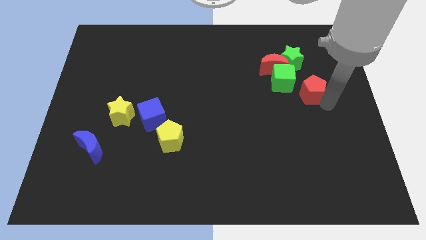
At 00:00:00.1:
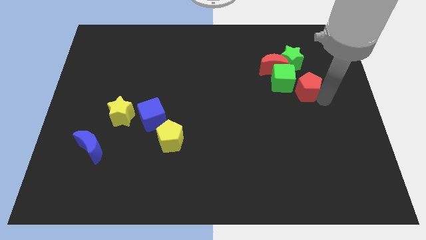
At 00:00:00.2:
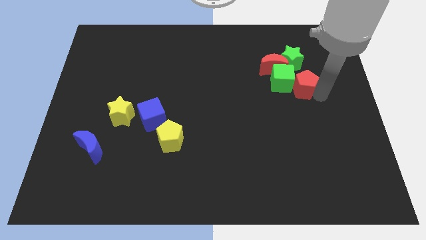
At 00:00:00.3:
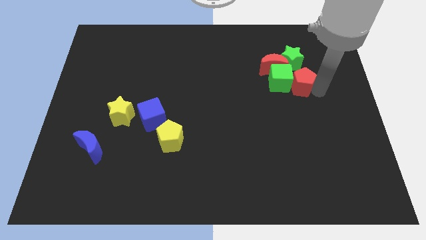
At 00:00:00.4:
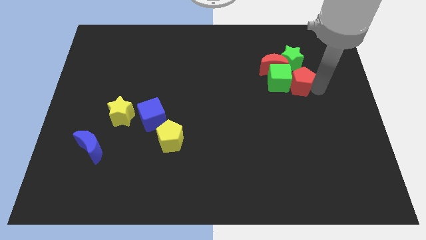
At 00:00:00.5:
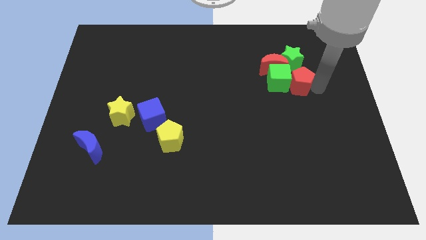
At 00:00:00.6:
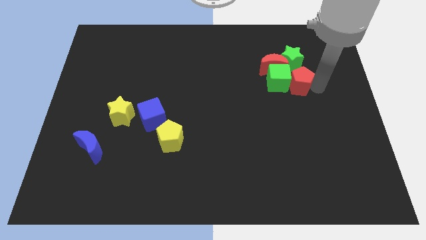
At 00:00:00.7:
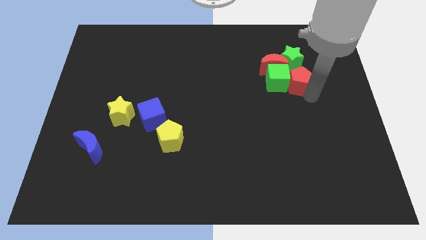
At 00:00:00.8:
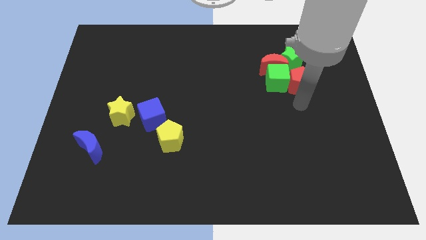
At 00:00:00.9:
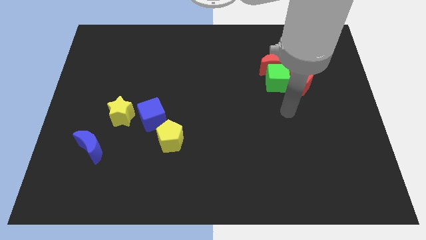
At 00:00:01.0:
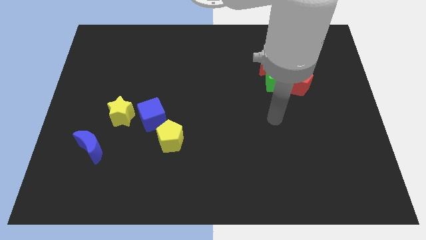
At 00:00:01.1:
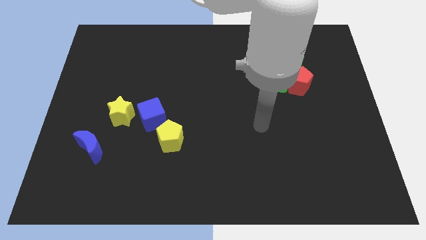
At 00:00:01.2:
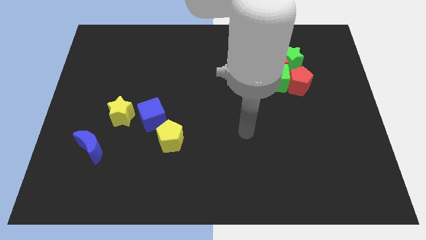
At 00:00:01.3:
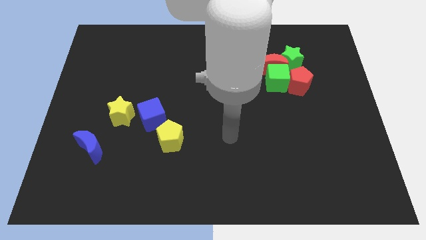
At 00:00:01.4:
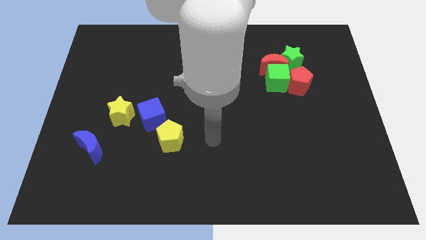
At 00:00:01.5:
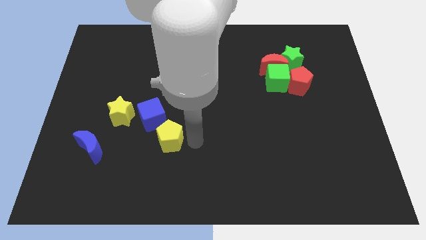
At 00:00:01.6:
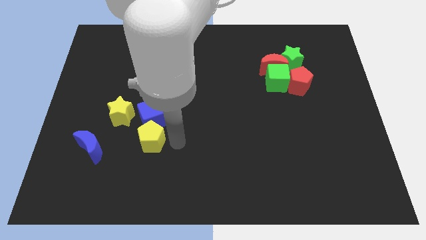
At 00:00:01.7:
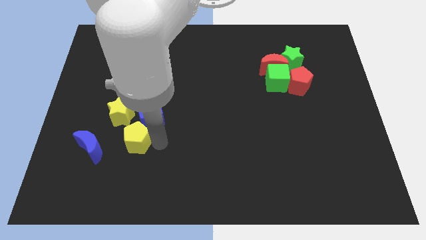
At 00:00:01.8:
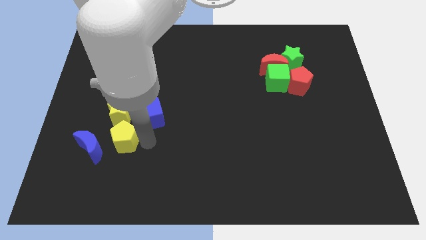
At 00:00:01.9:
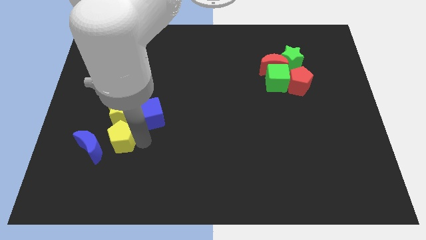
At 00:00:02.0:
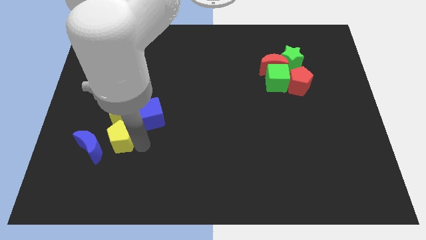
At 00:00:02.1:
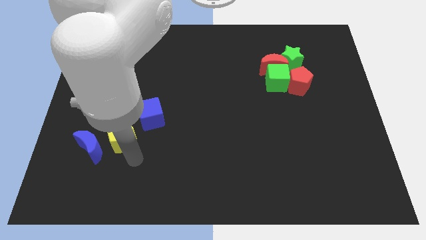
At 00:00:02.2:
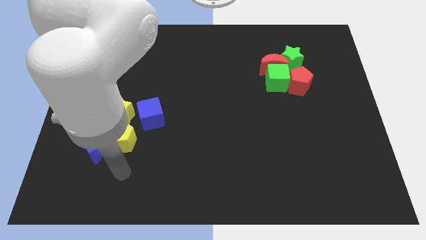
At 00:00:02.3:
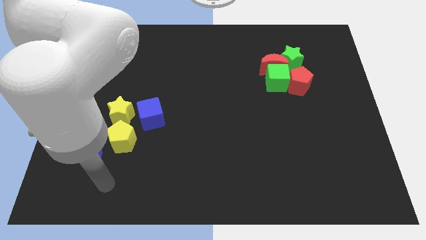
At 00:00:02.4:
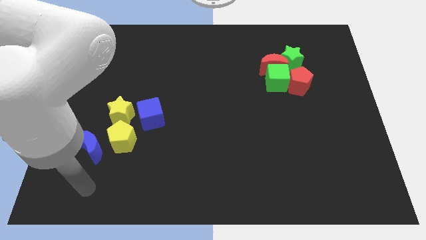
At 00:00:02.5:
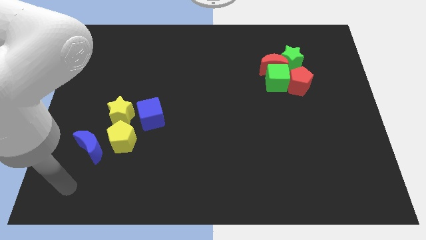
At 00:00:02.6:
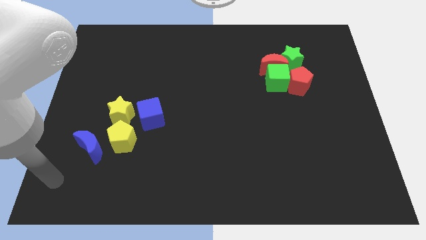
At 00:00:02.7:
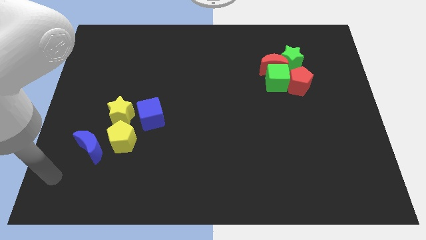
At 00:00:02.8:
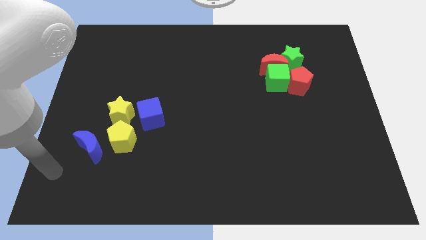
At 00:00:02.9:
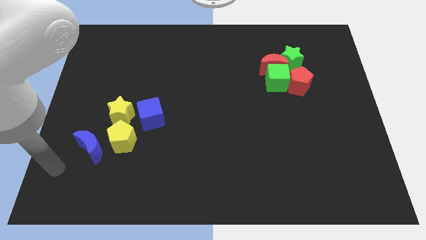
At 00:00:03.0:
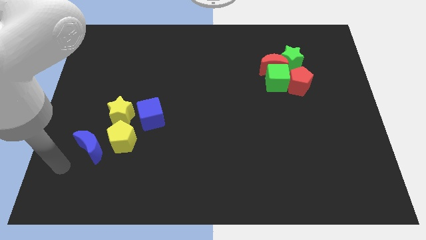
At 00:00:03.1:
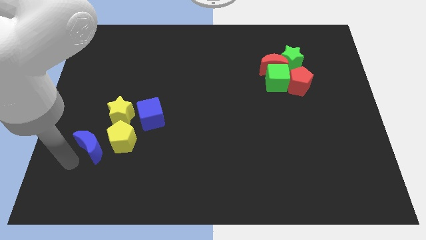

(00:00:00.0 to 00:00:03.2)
move the red pentagon close to the green cube

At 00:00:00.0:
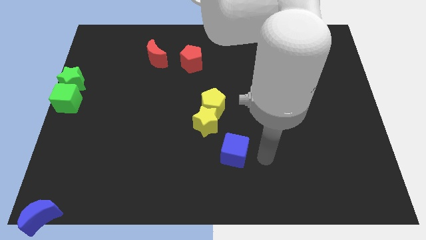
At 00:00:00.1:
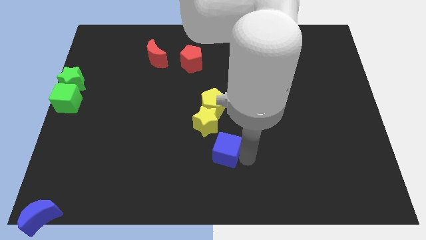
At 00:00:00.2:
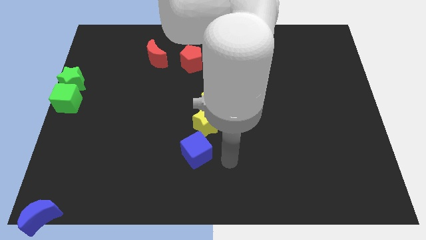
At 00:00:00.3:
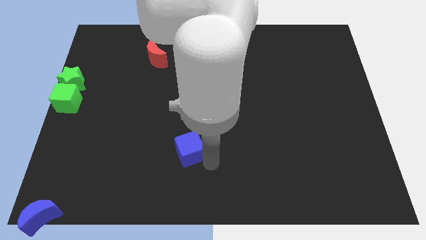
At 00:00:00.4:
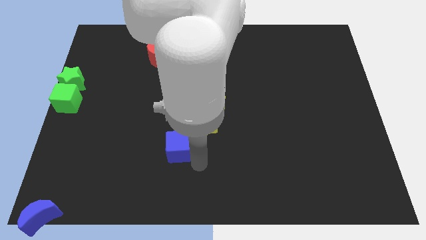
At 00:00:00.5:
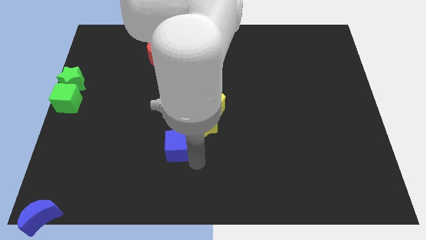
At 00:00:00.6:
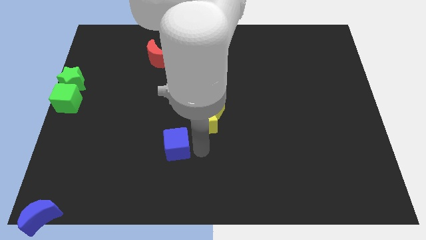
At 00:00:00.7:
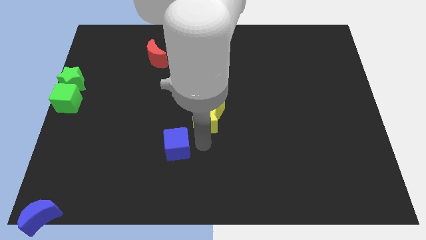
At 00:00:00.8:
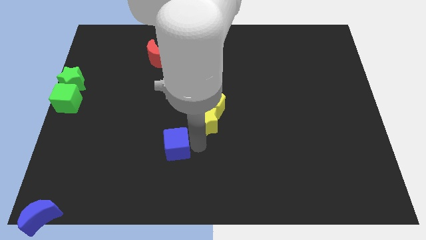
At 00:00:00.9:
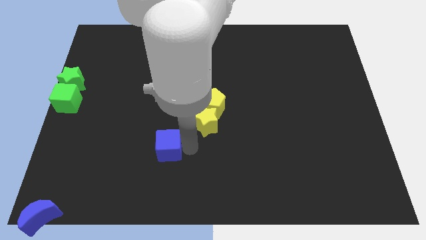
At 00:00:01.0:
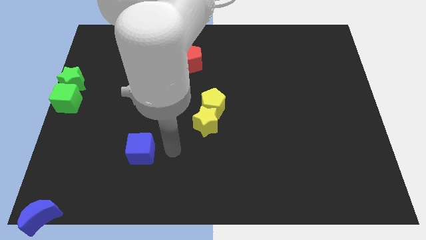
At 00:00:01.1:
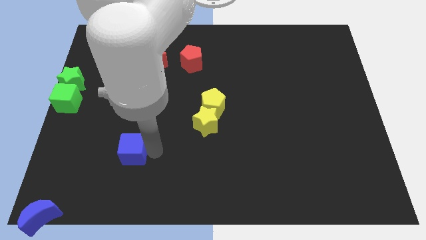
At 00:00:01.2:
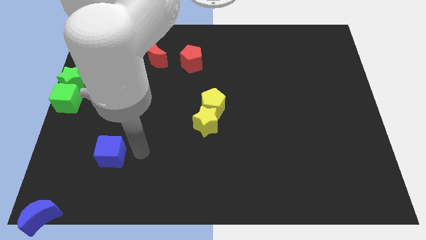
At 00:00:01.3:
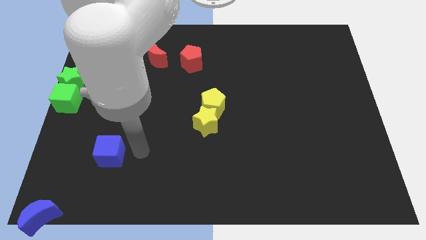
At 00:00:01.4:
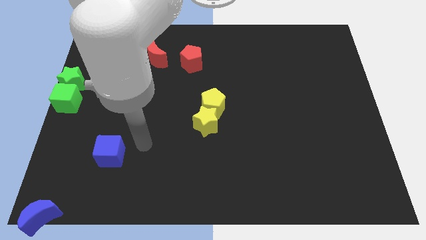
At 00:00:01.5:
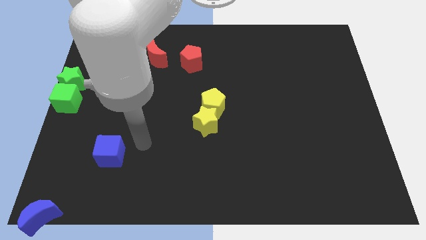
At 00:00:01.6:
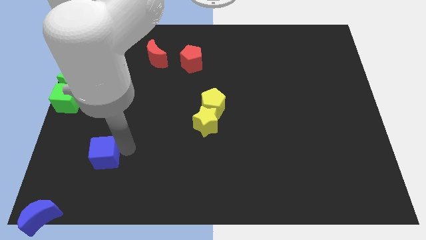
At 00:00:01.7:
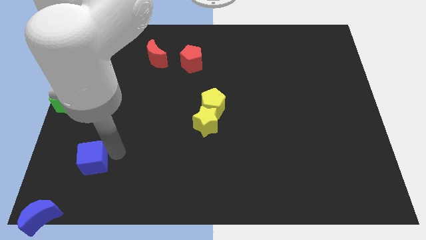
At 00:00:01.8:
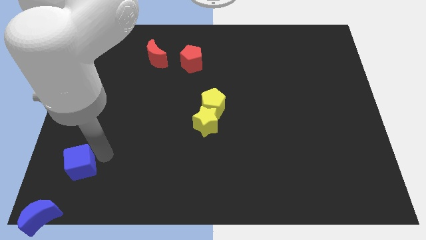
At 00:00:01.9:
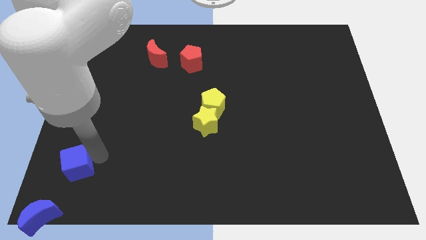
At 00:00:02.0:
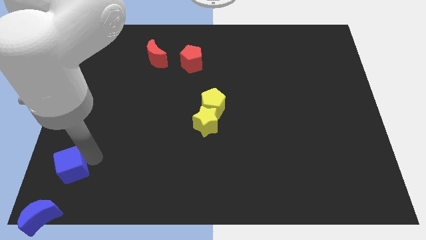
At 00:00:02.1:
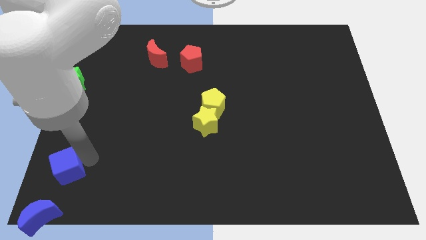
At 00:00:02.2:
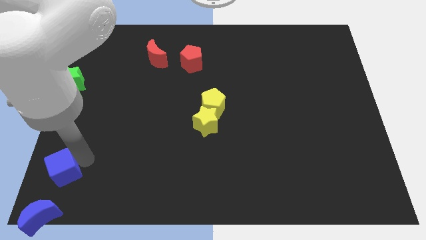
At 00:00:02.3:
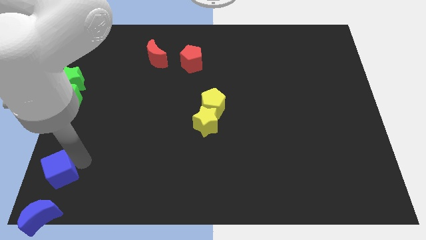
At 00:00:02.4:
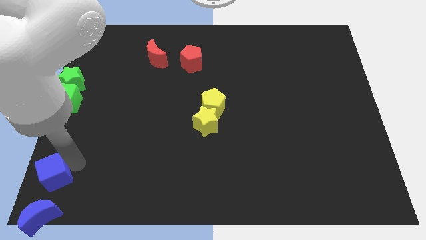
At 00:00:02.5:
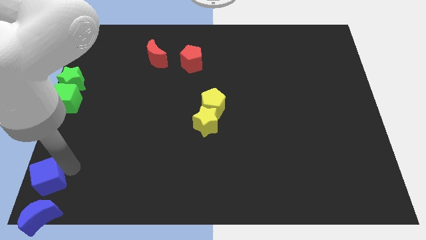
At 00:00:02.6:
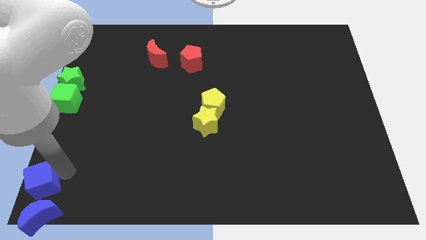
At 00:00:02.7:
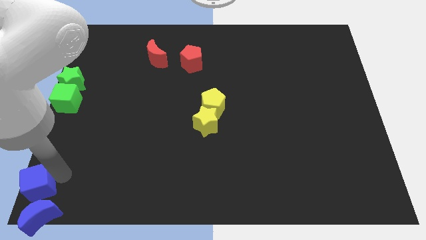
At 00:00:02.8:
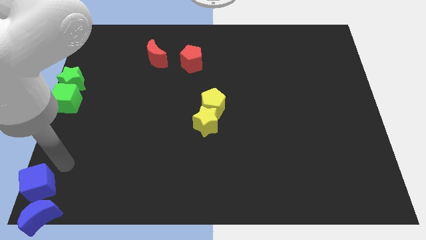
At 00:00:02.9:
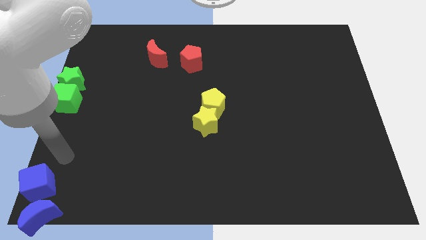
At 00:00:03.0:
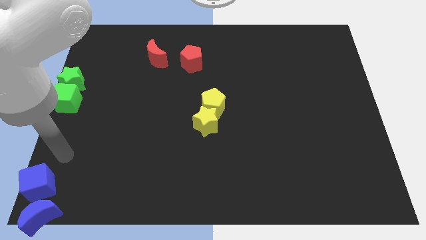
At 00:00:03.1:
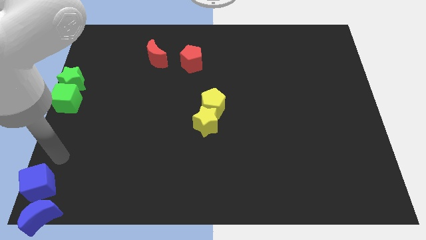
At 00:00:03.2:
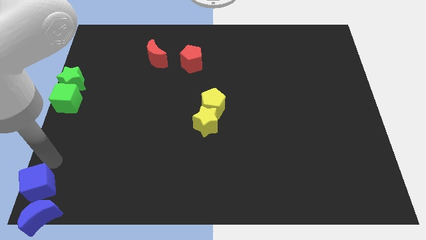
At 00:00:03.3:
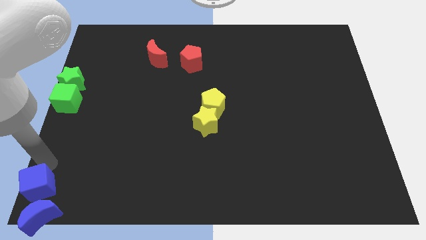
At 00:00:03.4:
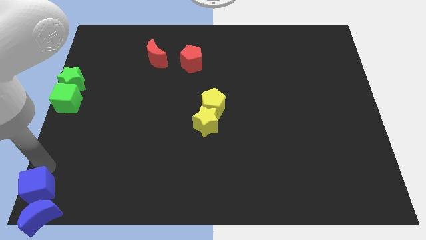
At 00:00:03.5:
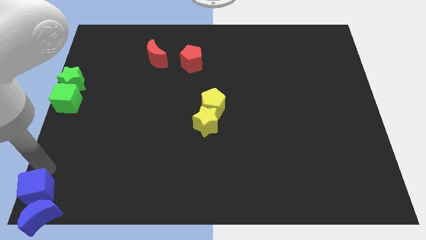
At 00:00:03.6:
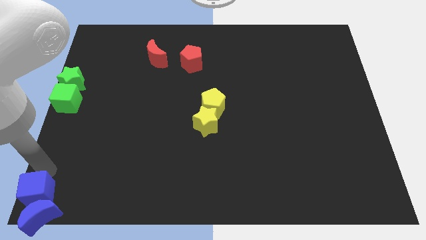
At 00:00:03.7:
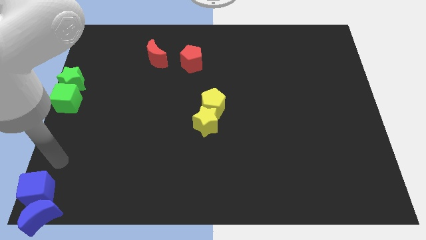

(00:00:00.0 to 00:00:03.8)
push blue cube to the bottom left corner

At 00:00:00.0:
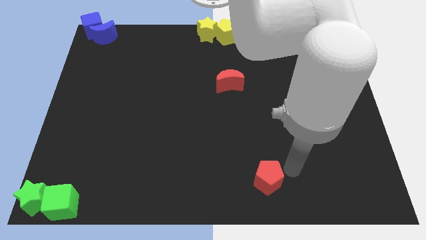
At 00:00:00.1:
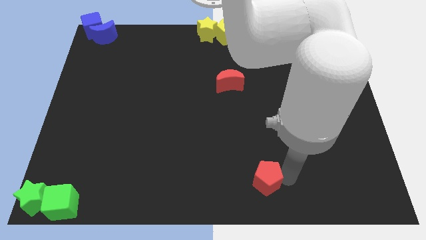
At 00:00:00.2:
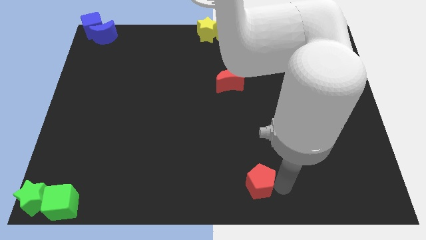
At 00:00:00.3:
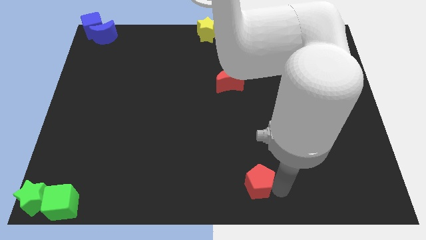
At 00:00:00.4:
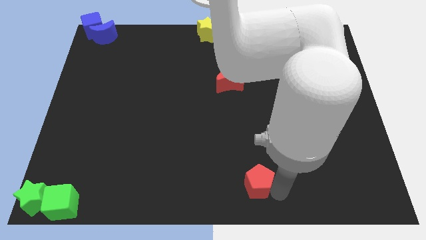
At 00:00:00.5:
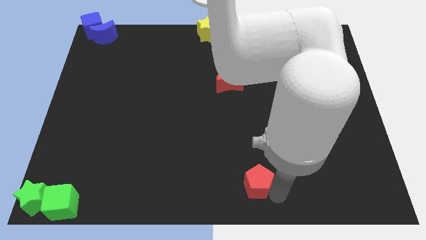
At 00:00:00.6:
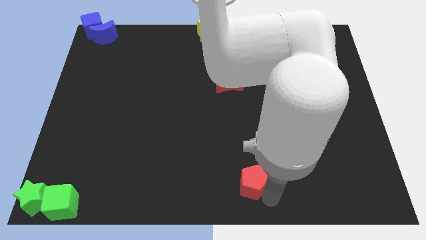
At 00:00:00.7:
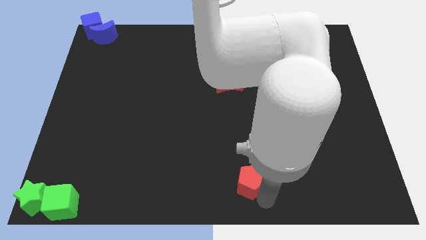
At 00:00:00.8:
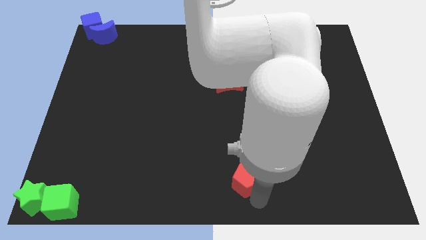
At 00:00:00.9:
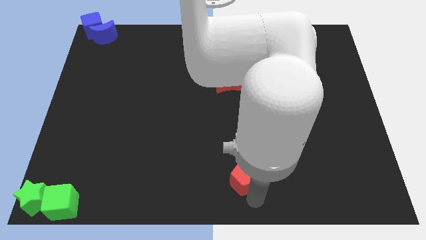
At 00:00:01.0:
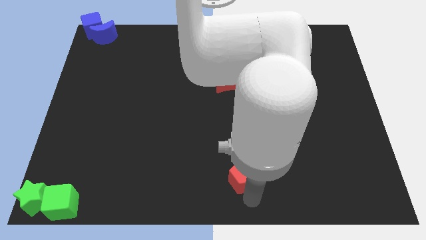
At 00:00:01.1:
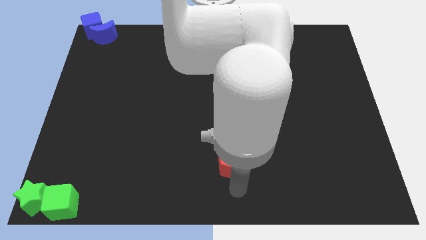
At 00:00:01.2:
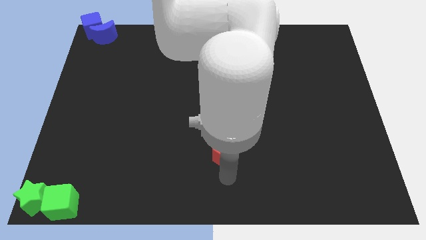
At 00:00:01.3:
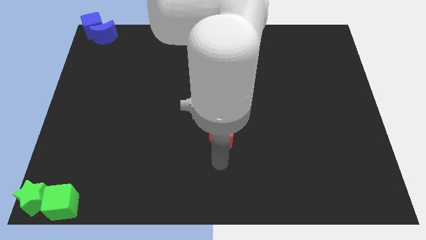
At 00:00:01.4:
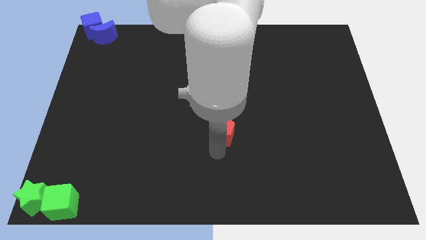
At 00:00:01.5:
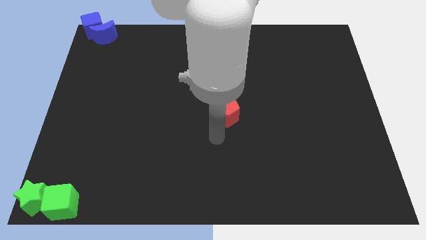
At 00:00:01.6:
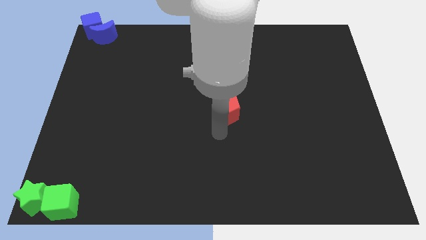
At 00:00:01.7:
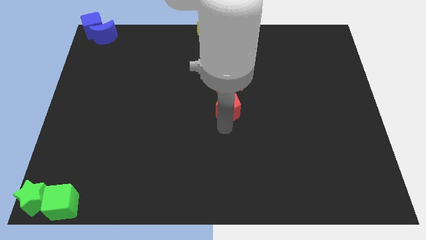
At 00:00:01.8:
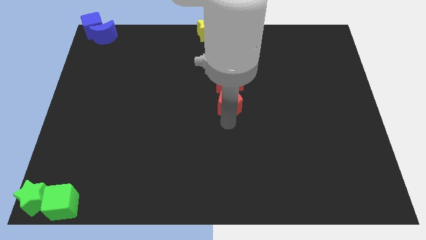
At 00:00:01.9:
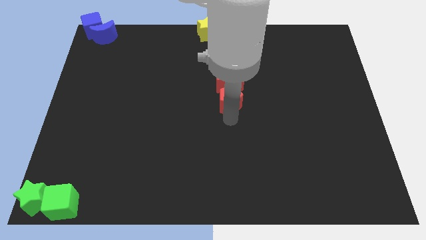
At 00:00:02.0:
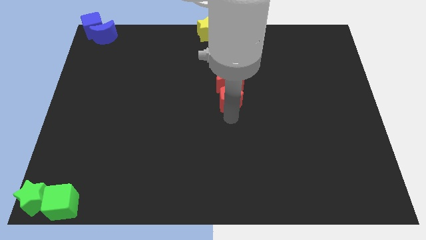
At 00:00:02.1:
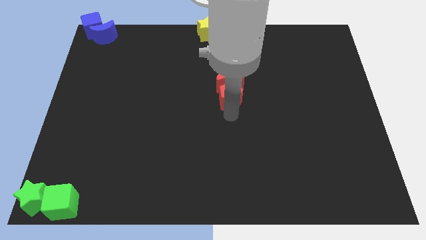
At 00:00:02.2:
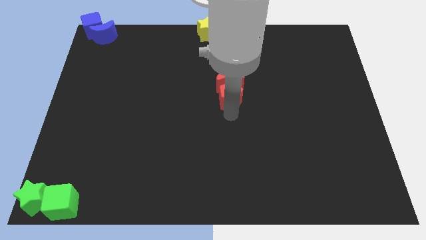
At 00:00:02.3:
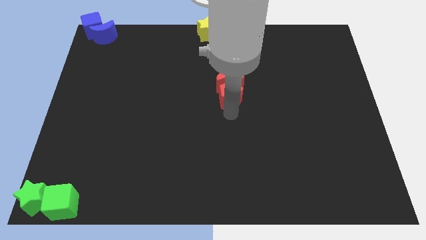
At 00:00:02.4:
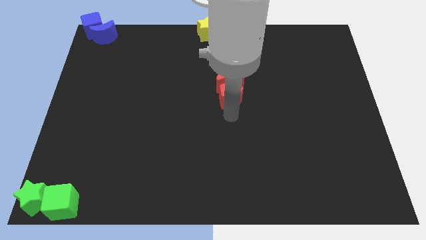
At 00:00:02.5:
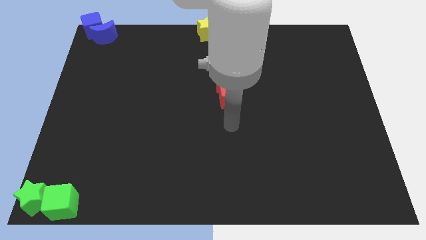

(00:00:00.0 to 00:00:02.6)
move the red pentagon close to the red moon
